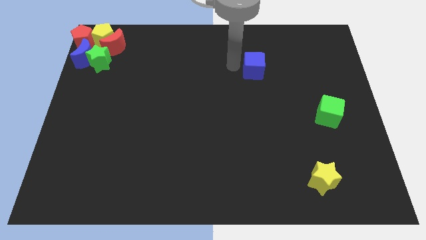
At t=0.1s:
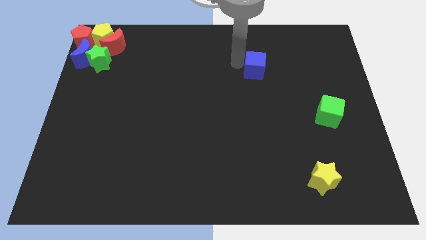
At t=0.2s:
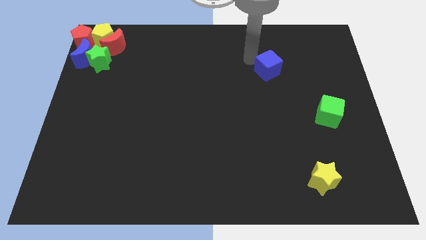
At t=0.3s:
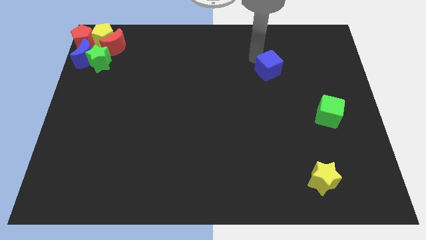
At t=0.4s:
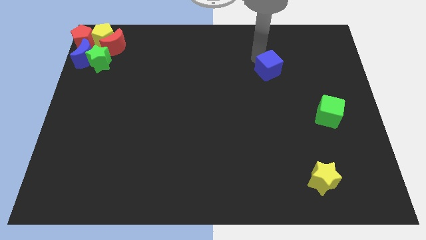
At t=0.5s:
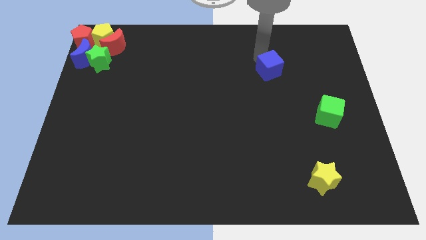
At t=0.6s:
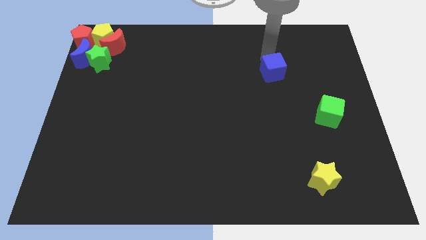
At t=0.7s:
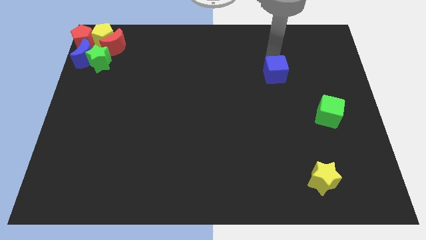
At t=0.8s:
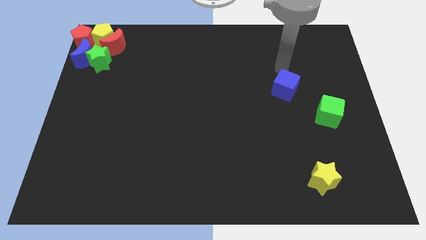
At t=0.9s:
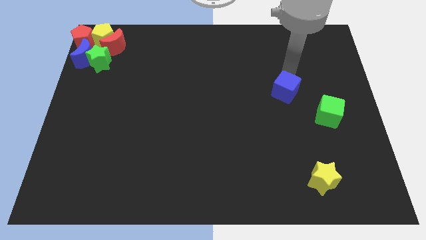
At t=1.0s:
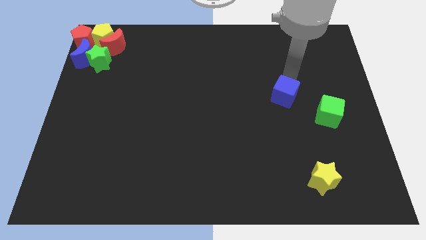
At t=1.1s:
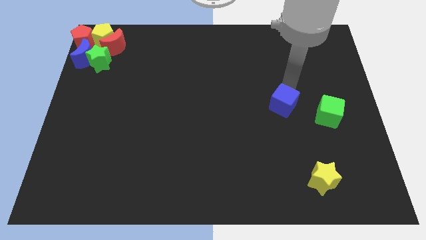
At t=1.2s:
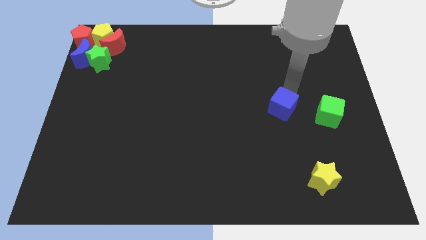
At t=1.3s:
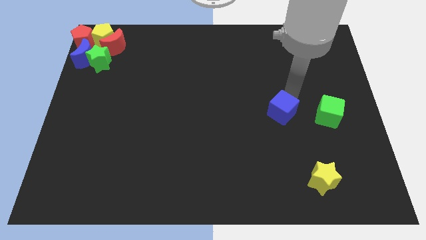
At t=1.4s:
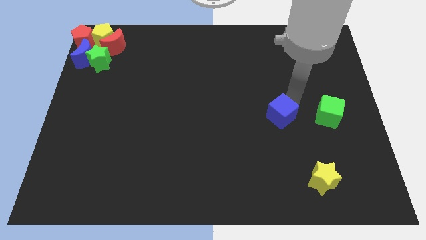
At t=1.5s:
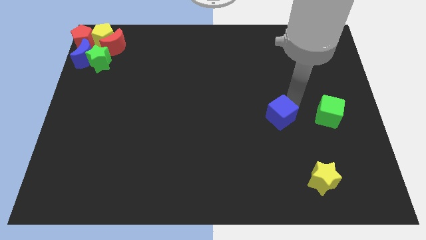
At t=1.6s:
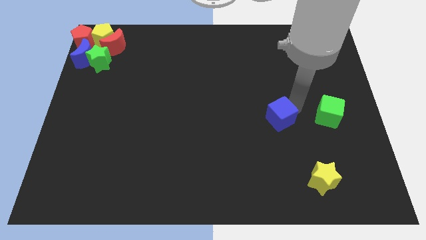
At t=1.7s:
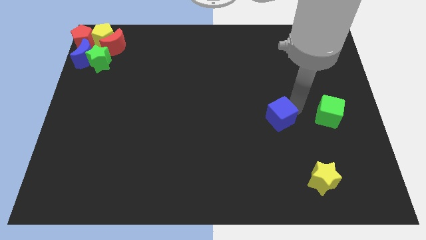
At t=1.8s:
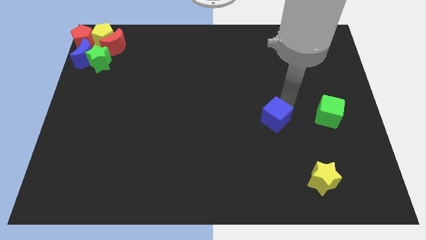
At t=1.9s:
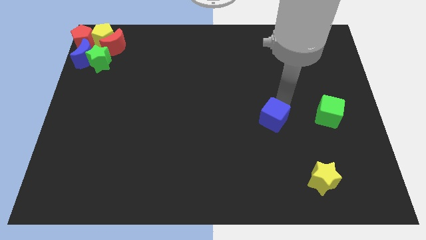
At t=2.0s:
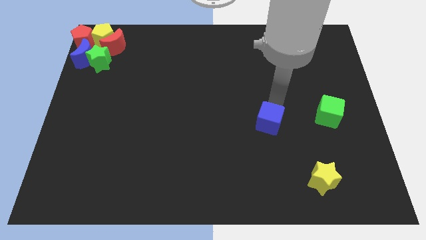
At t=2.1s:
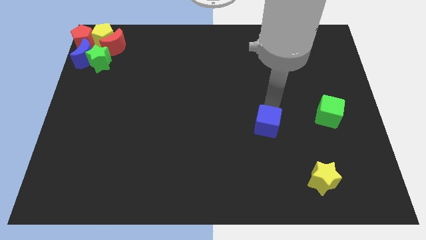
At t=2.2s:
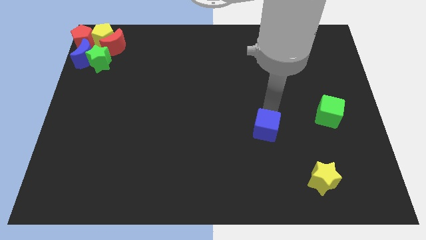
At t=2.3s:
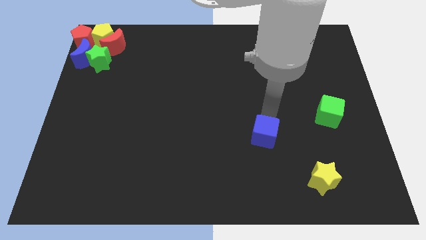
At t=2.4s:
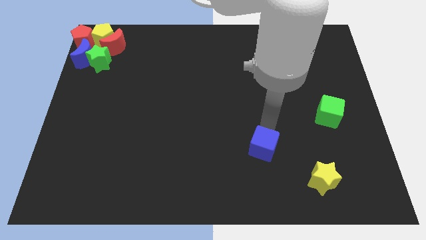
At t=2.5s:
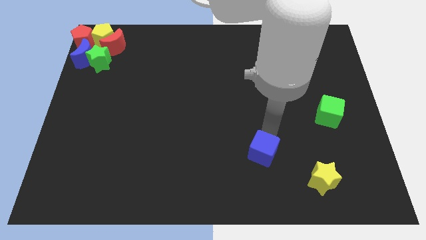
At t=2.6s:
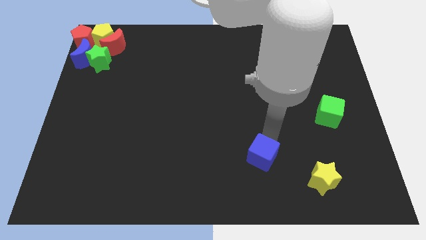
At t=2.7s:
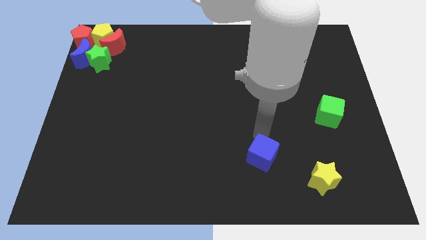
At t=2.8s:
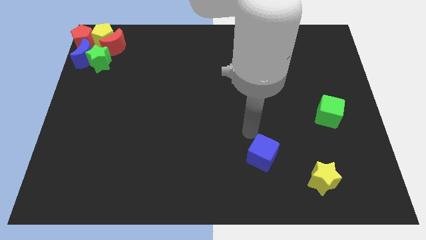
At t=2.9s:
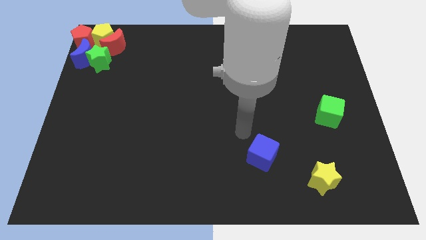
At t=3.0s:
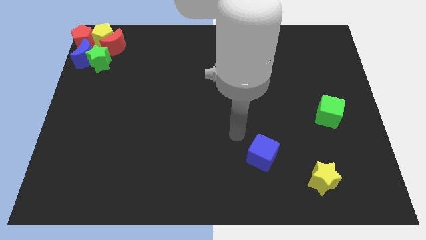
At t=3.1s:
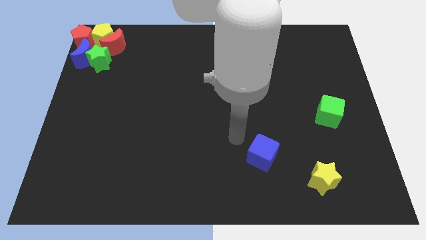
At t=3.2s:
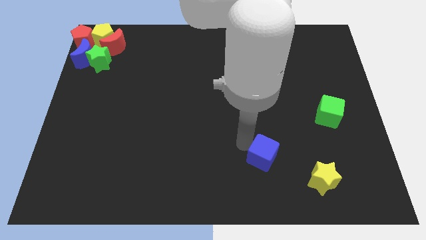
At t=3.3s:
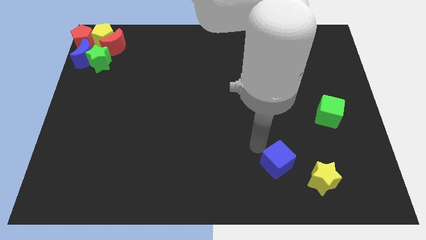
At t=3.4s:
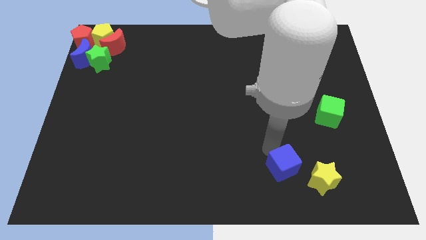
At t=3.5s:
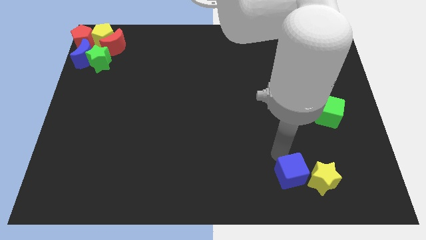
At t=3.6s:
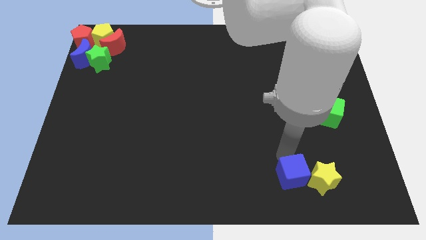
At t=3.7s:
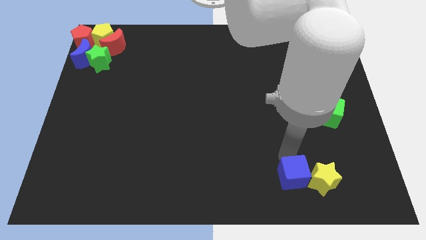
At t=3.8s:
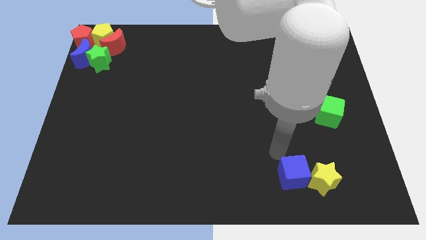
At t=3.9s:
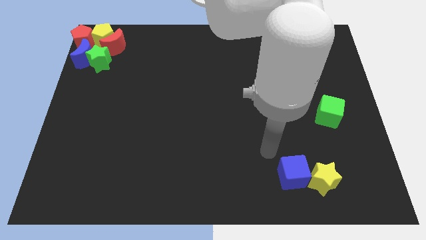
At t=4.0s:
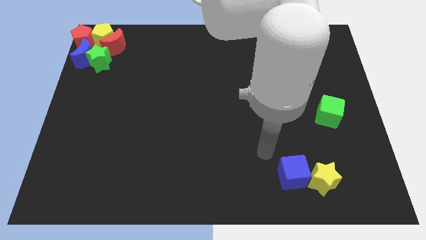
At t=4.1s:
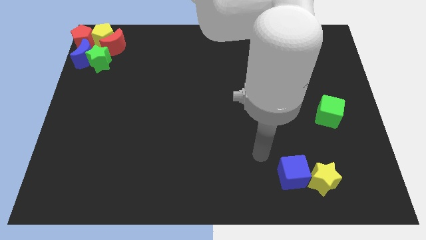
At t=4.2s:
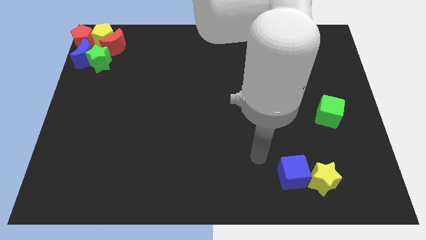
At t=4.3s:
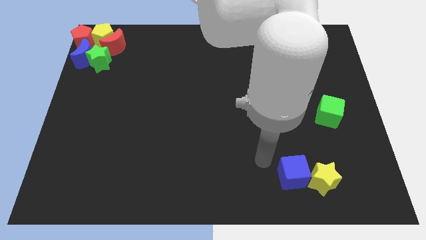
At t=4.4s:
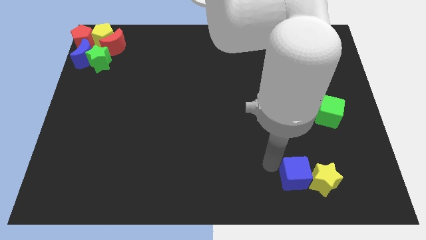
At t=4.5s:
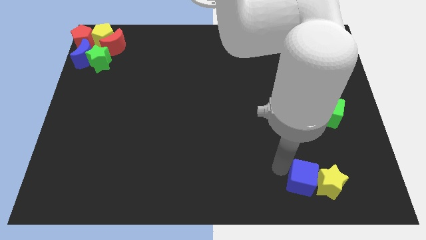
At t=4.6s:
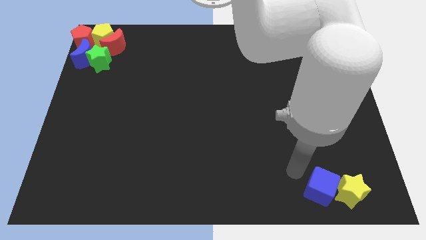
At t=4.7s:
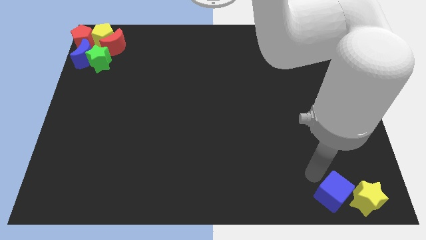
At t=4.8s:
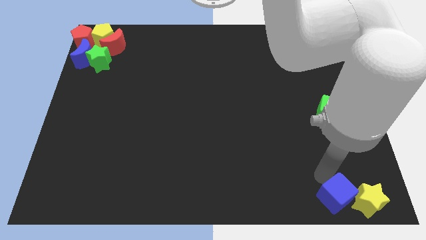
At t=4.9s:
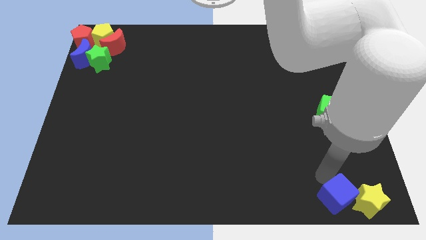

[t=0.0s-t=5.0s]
push the blue cube into the yellow star

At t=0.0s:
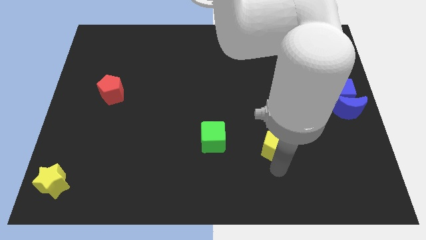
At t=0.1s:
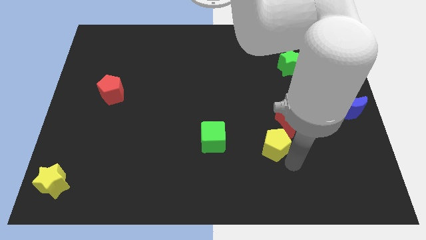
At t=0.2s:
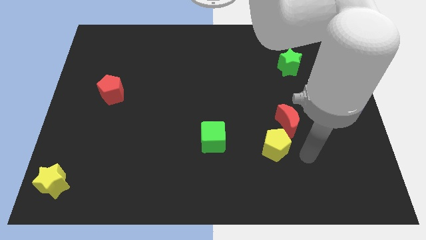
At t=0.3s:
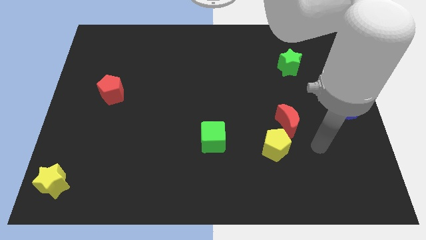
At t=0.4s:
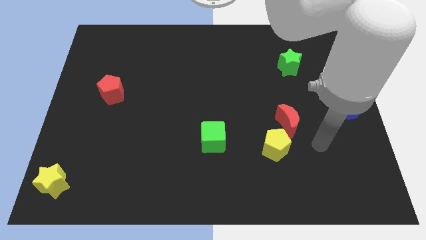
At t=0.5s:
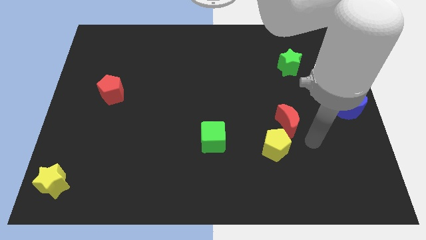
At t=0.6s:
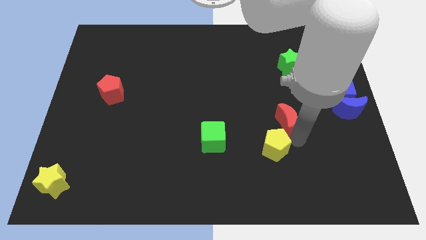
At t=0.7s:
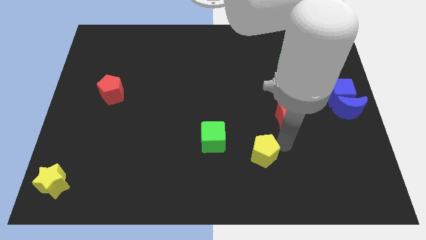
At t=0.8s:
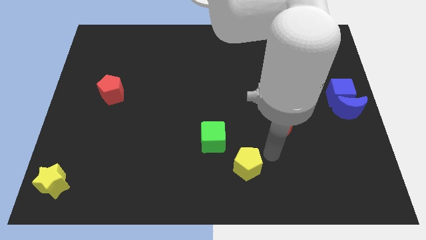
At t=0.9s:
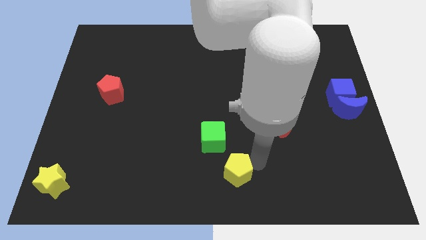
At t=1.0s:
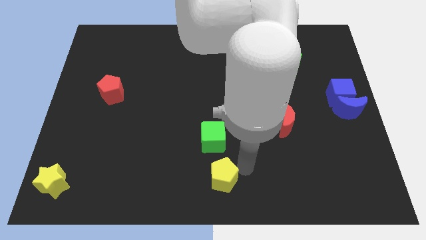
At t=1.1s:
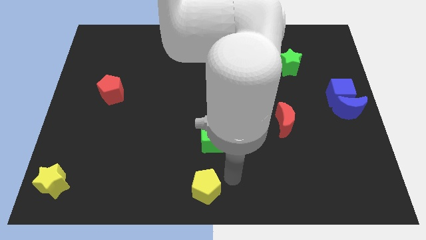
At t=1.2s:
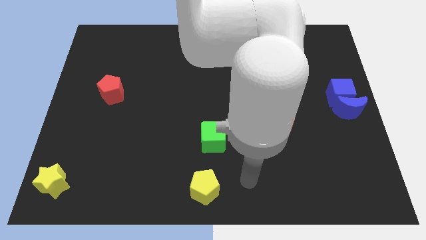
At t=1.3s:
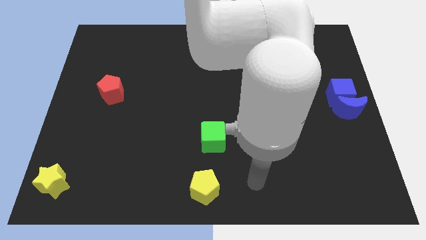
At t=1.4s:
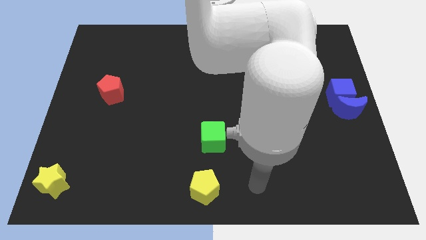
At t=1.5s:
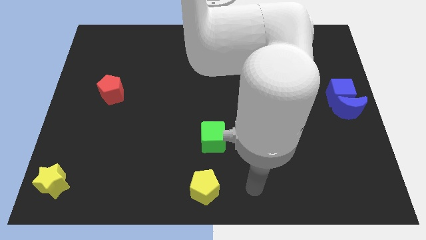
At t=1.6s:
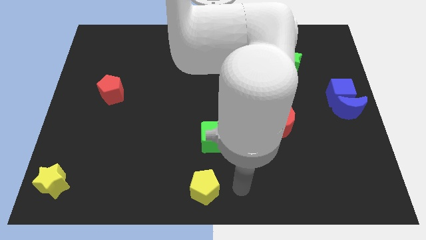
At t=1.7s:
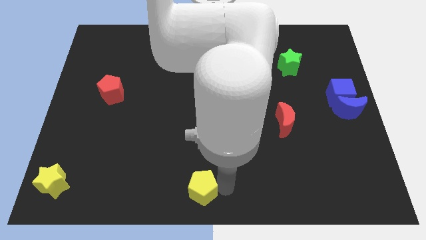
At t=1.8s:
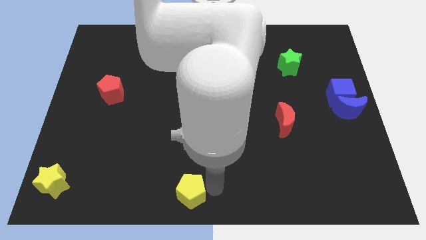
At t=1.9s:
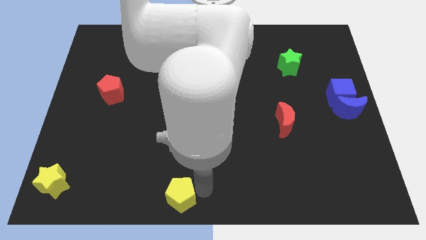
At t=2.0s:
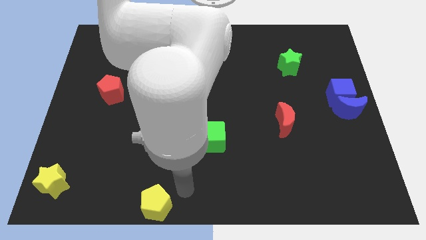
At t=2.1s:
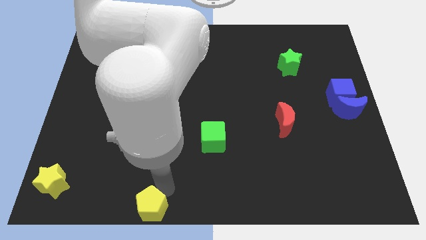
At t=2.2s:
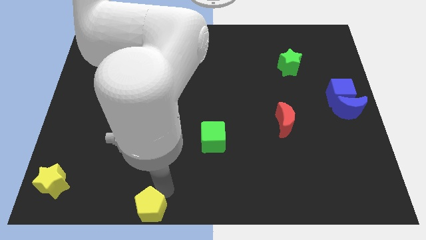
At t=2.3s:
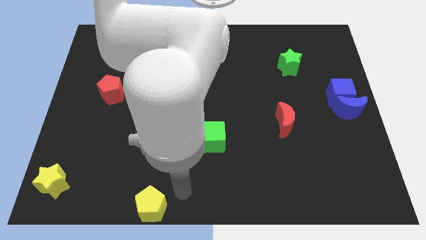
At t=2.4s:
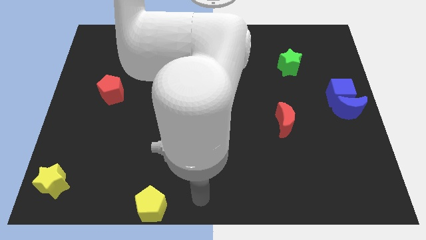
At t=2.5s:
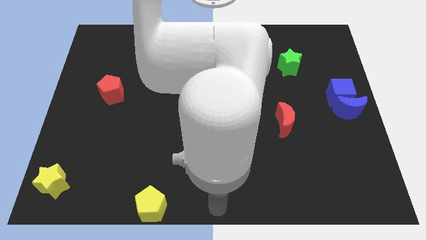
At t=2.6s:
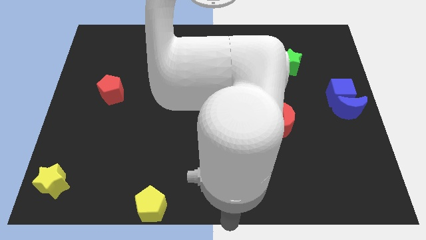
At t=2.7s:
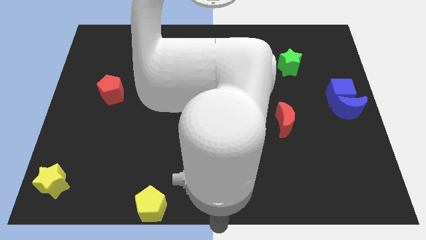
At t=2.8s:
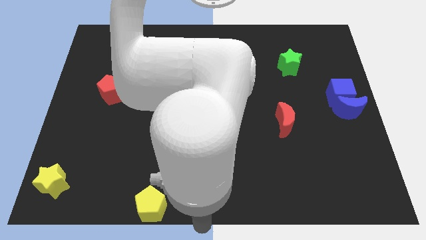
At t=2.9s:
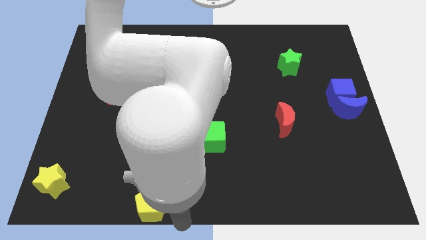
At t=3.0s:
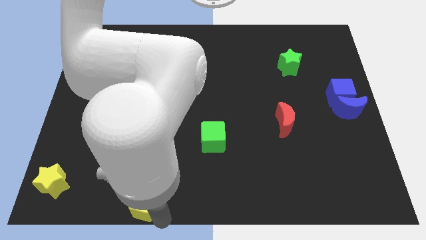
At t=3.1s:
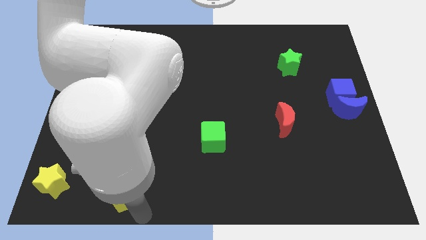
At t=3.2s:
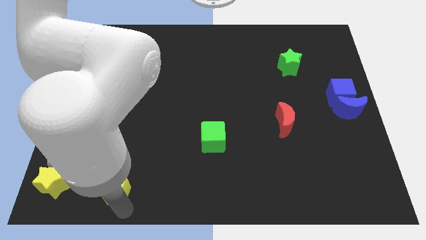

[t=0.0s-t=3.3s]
move yellow pentagon towards yellow star

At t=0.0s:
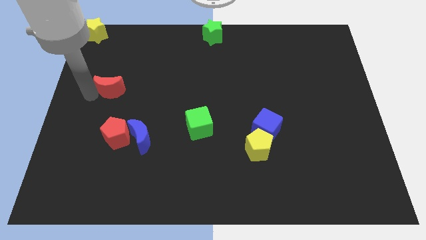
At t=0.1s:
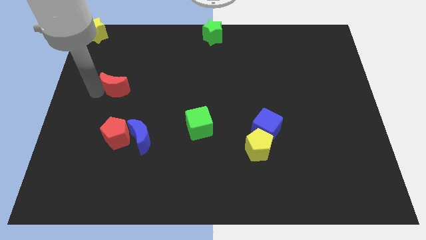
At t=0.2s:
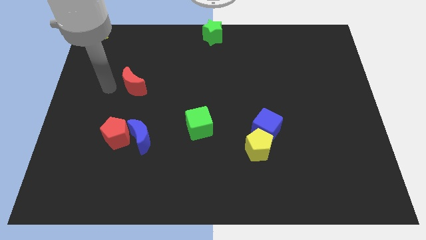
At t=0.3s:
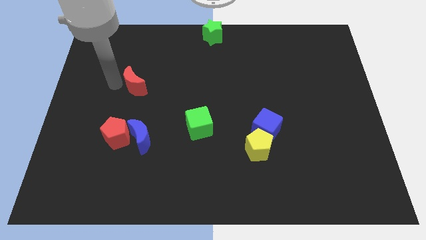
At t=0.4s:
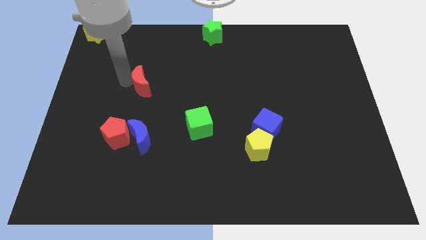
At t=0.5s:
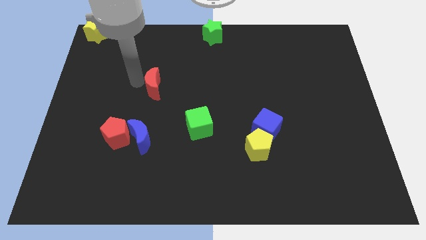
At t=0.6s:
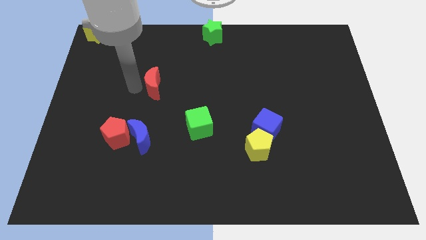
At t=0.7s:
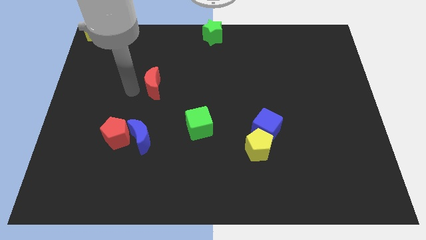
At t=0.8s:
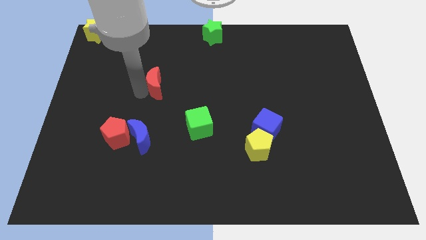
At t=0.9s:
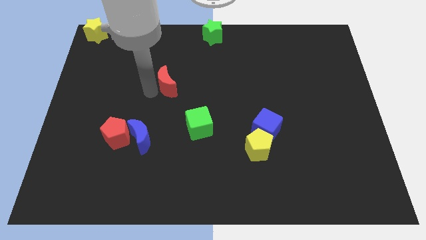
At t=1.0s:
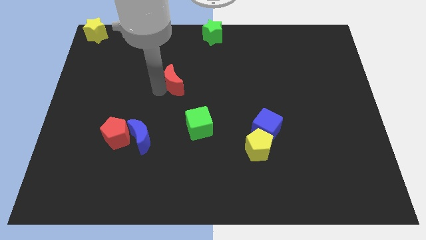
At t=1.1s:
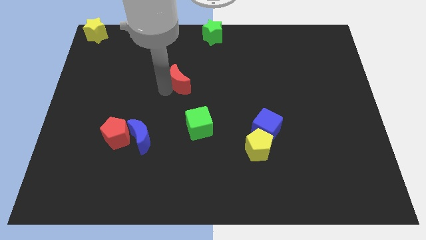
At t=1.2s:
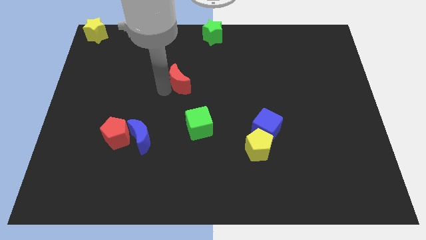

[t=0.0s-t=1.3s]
move the red crescent to the right of the board
